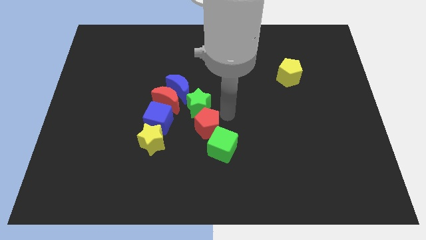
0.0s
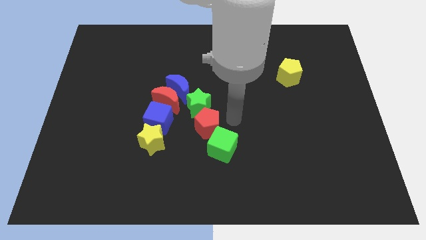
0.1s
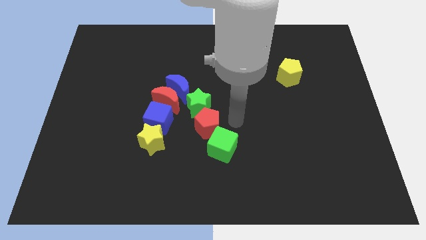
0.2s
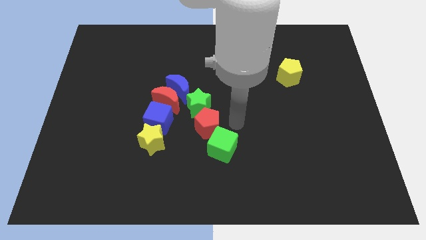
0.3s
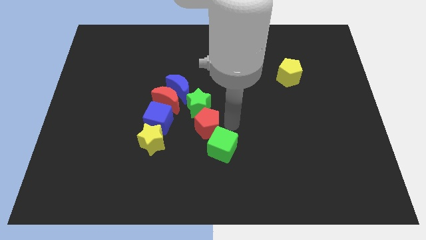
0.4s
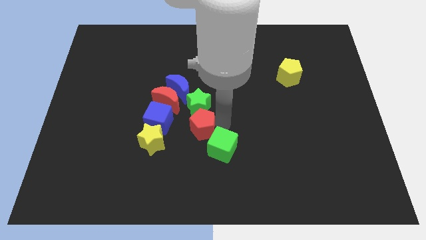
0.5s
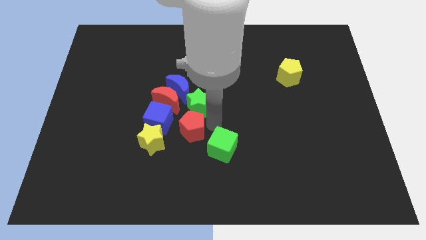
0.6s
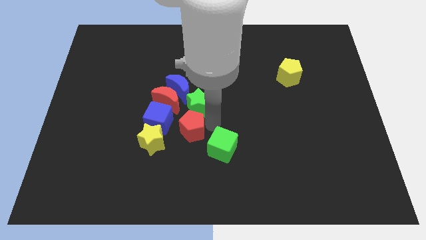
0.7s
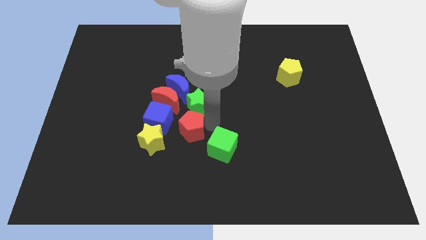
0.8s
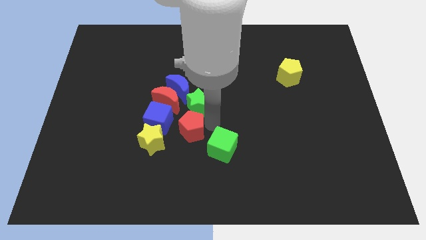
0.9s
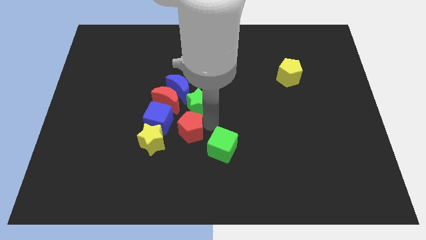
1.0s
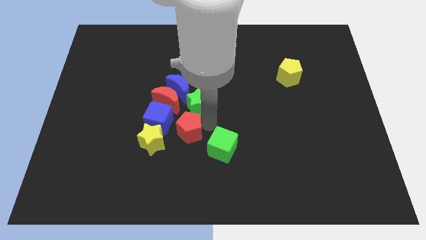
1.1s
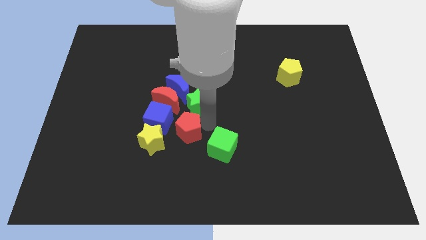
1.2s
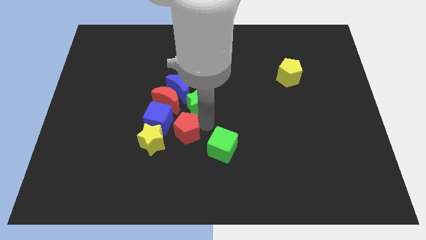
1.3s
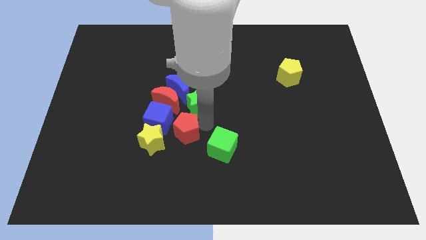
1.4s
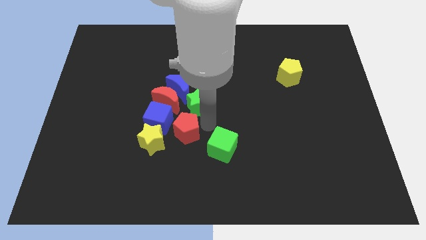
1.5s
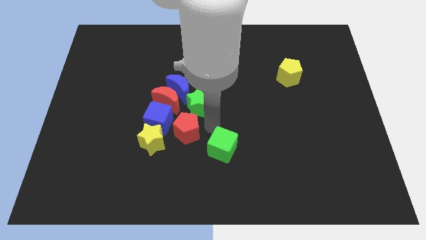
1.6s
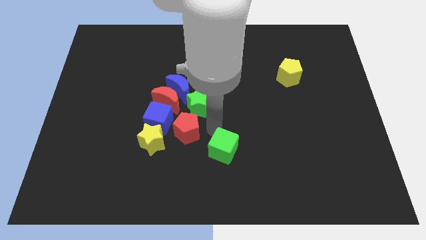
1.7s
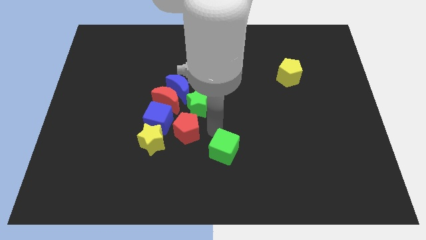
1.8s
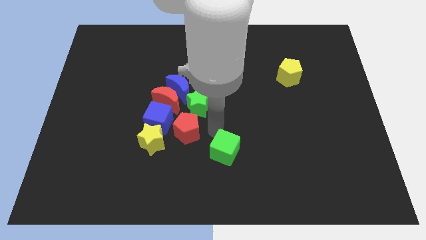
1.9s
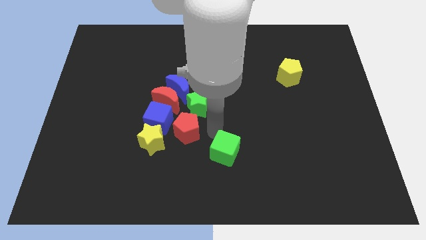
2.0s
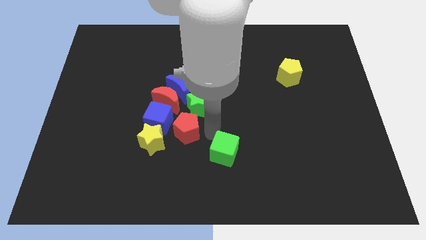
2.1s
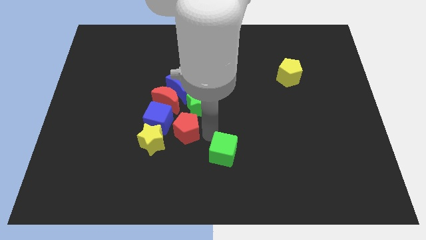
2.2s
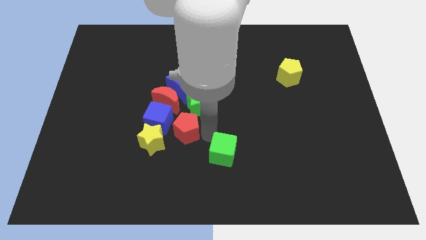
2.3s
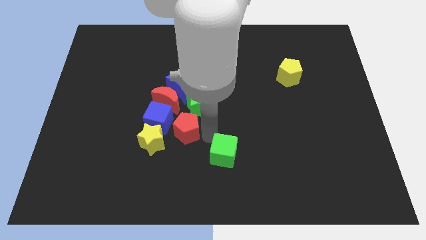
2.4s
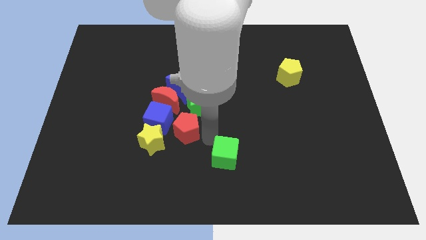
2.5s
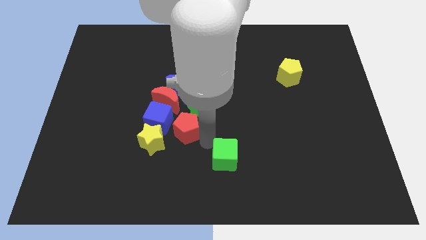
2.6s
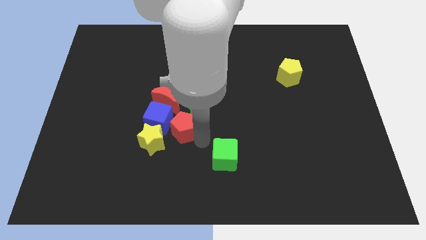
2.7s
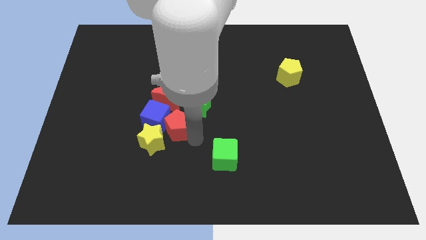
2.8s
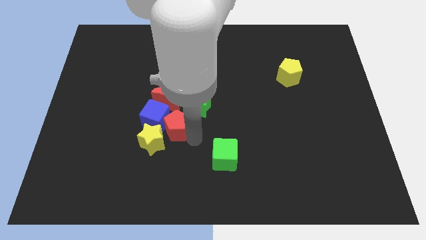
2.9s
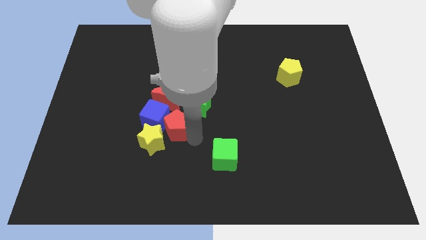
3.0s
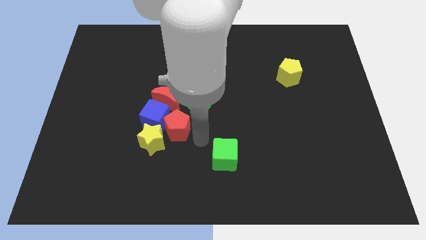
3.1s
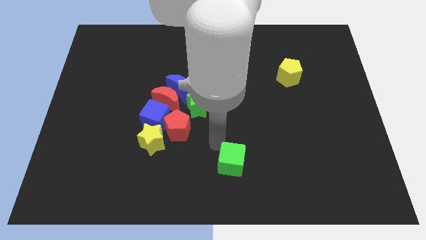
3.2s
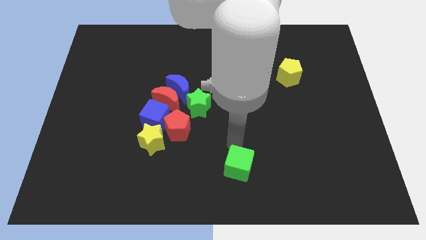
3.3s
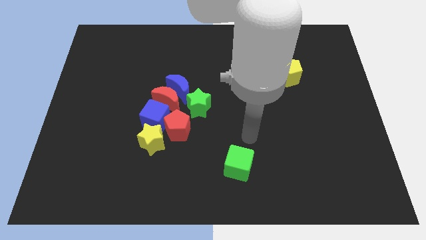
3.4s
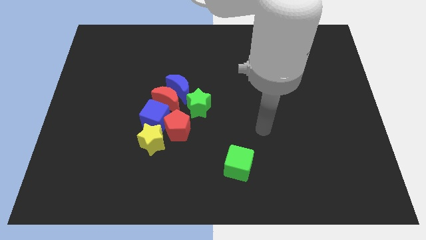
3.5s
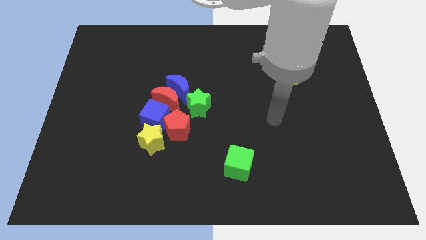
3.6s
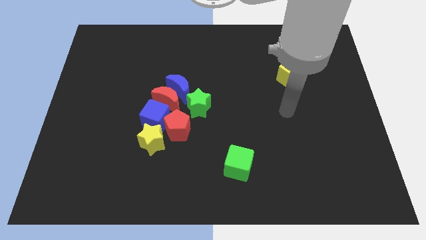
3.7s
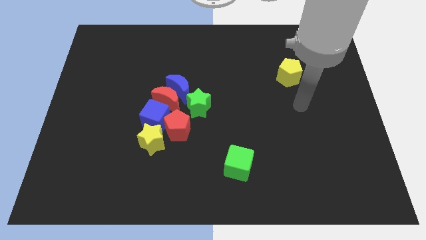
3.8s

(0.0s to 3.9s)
separate the green cube and red pentagon

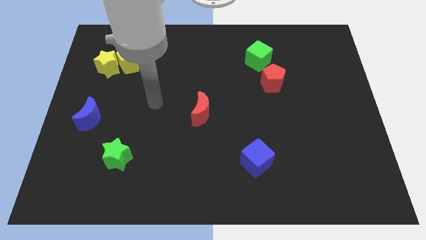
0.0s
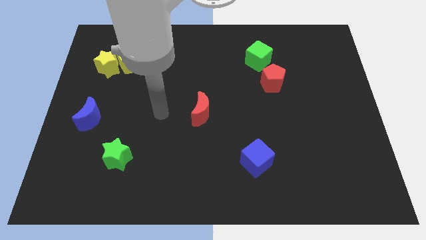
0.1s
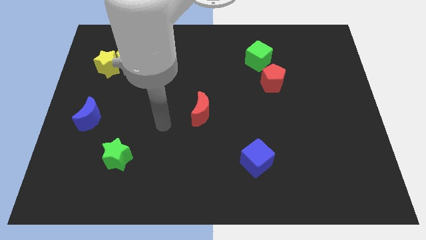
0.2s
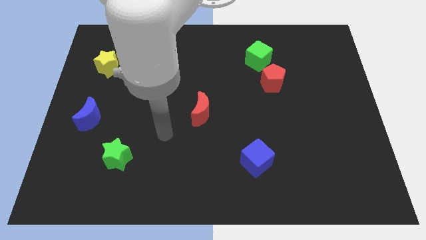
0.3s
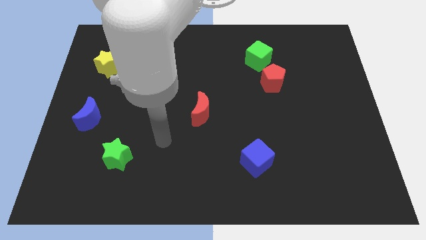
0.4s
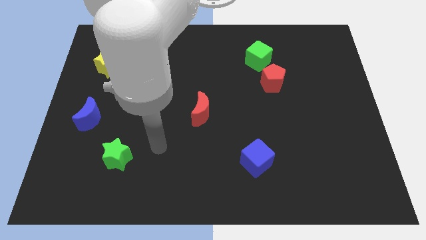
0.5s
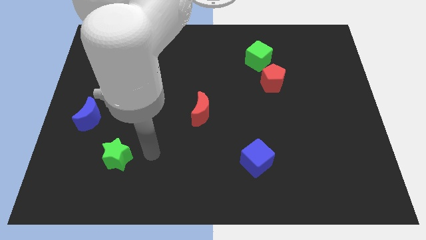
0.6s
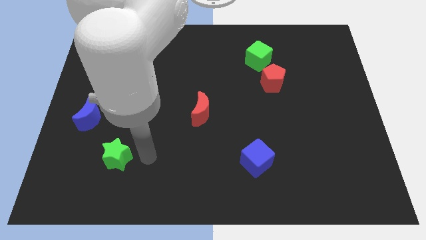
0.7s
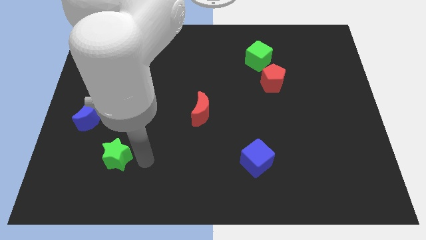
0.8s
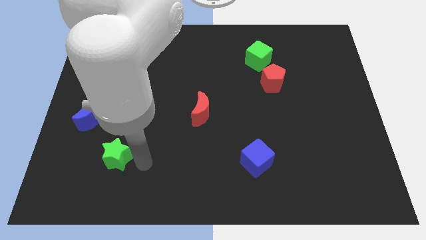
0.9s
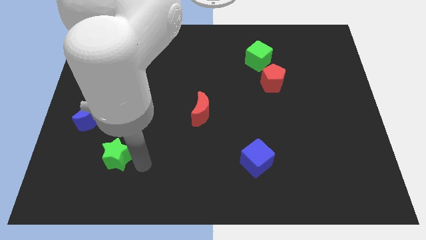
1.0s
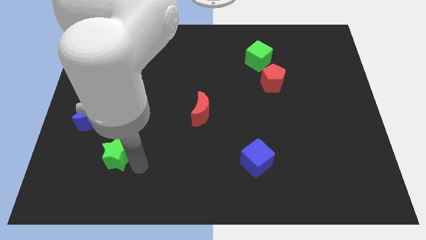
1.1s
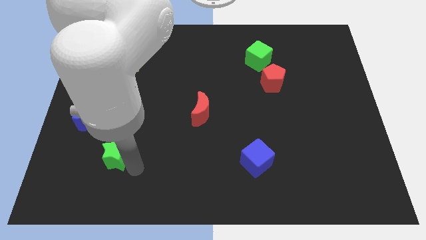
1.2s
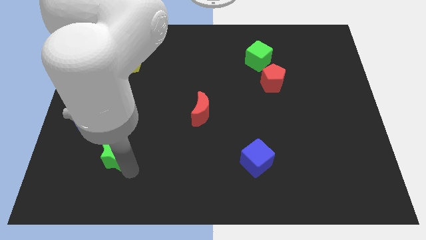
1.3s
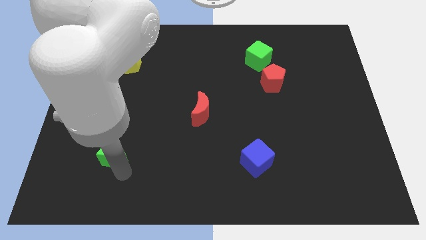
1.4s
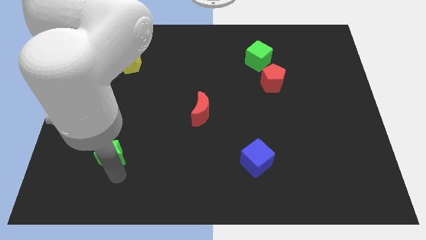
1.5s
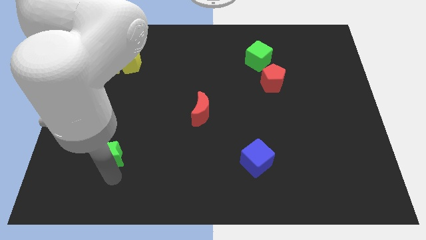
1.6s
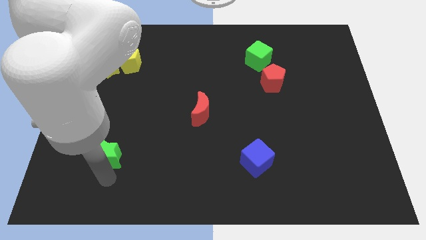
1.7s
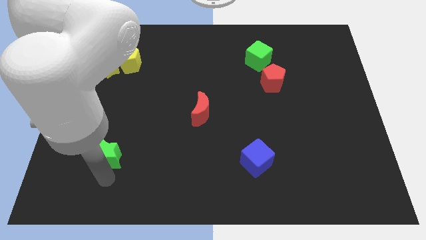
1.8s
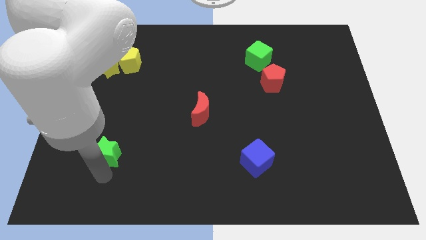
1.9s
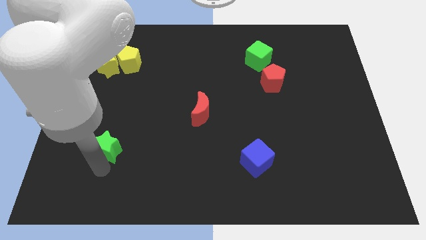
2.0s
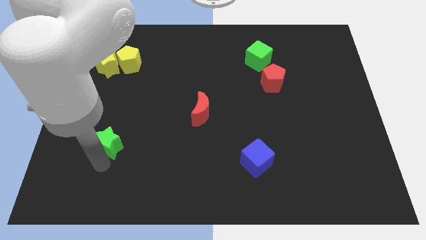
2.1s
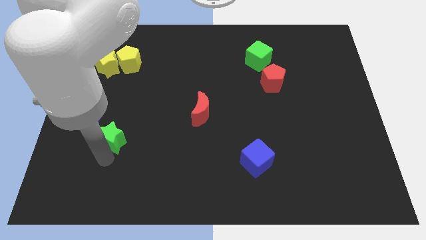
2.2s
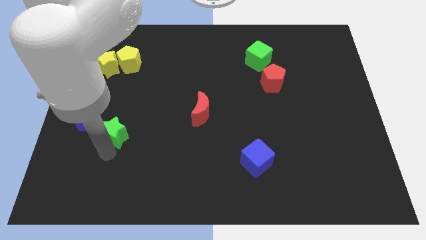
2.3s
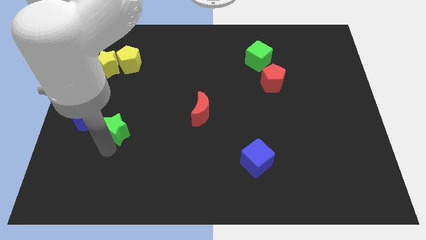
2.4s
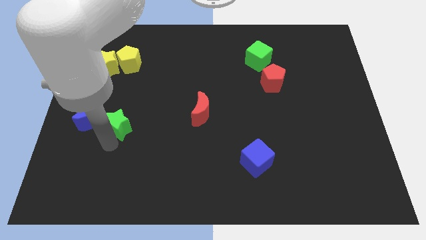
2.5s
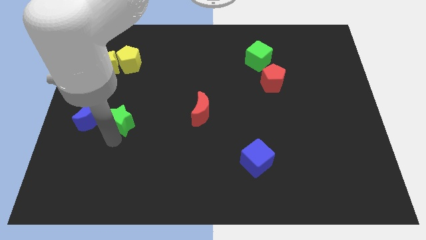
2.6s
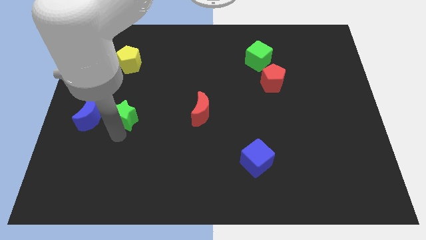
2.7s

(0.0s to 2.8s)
move the green star near right to the blue crescent

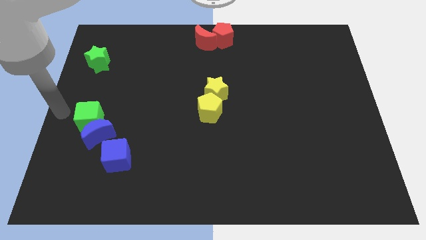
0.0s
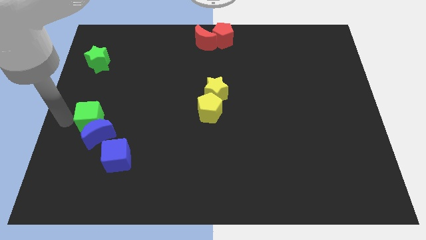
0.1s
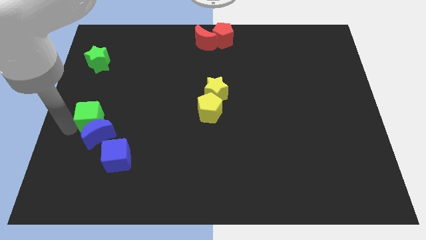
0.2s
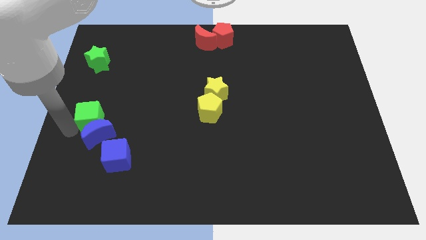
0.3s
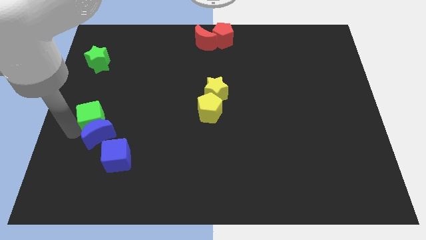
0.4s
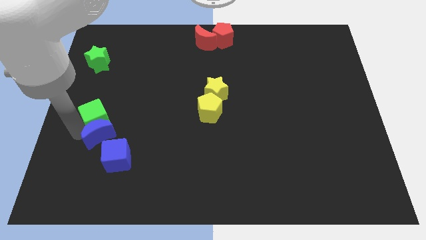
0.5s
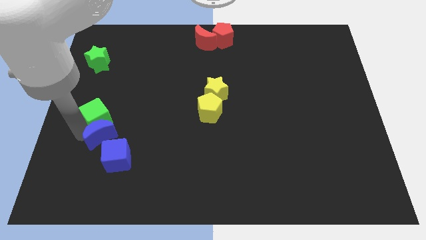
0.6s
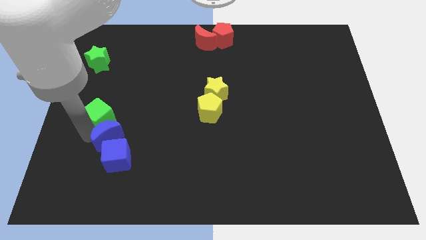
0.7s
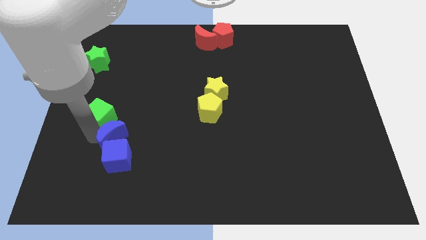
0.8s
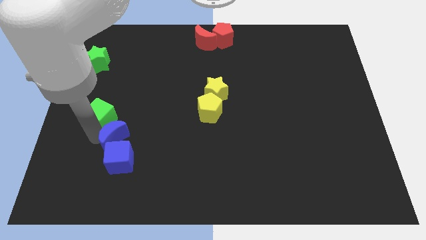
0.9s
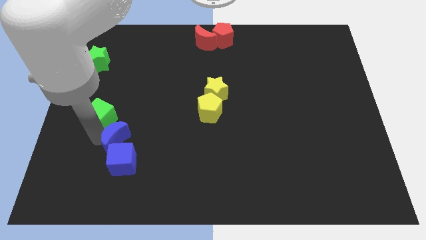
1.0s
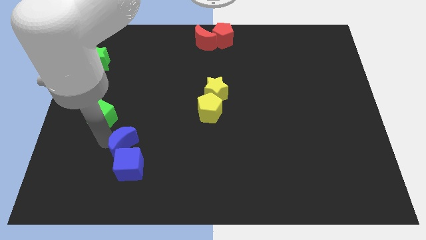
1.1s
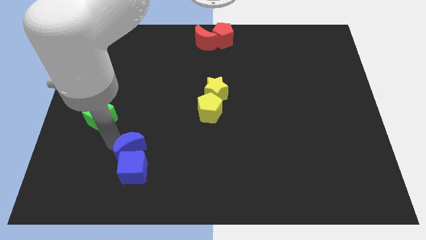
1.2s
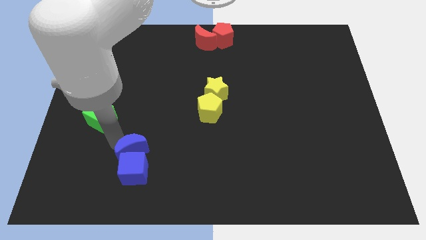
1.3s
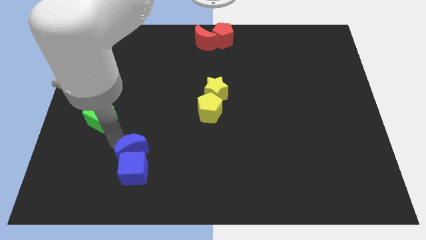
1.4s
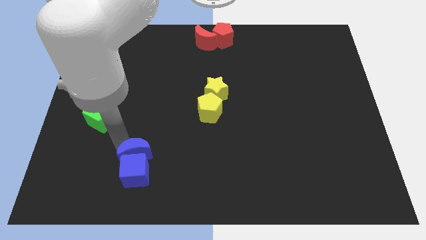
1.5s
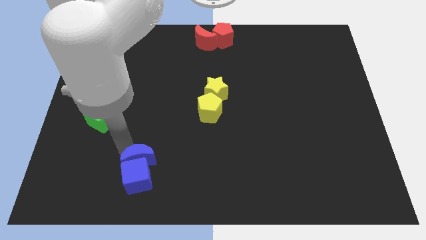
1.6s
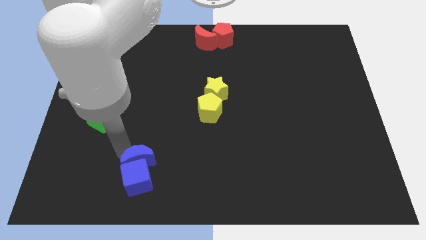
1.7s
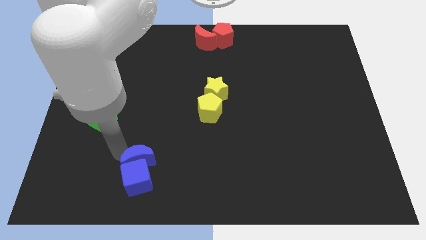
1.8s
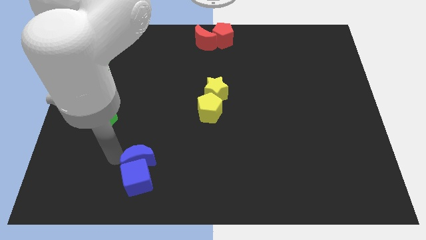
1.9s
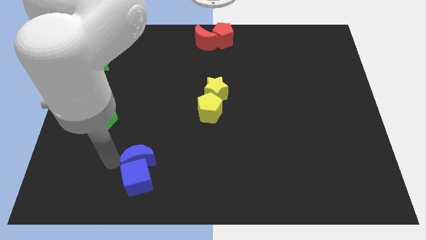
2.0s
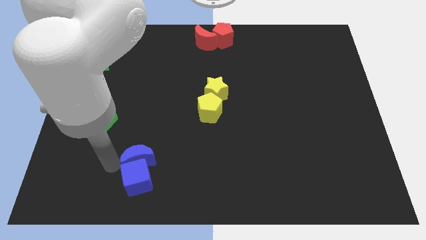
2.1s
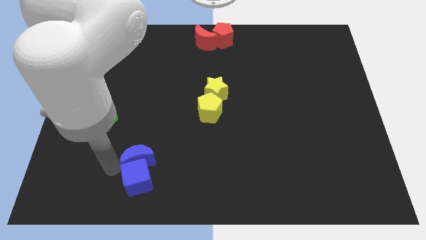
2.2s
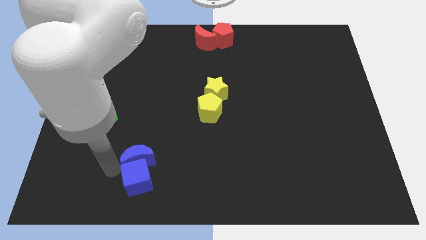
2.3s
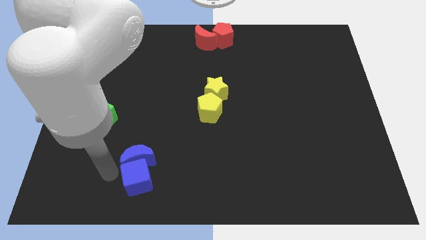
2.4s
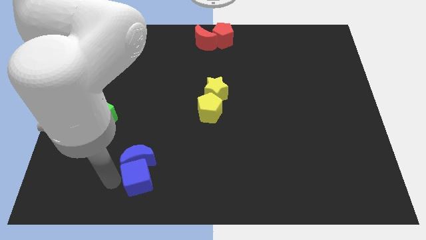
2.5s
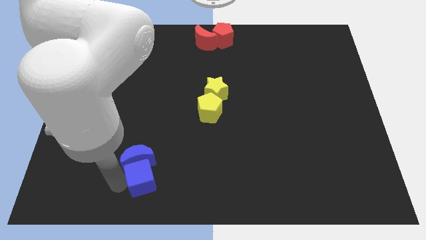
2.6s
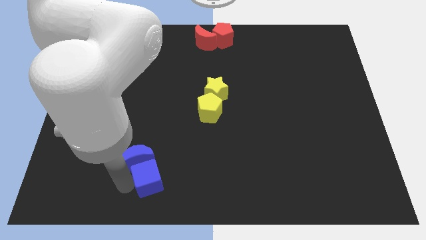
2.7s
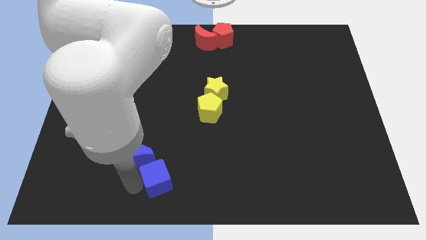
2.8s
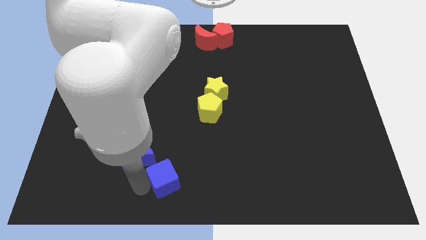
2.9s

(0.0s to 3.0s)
push the blue moon into the blue cube towards the bottom center of board
